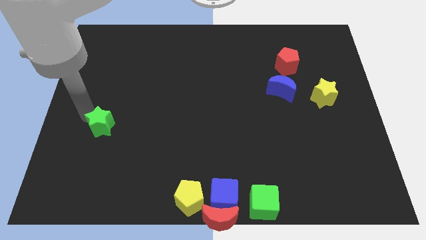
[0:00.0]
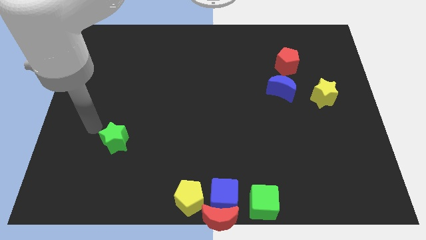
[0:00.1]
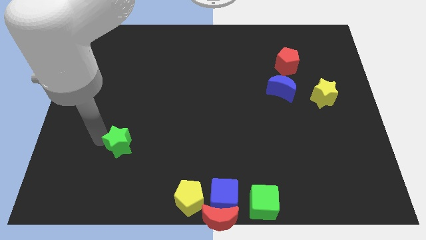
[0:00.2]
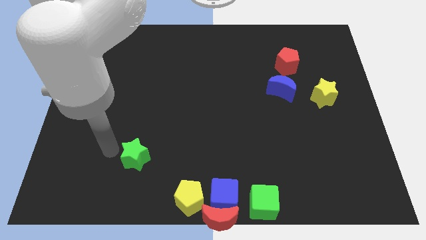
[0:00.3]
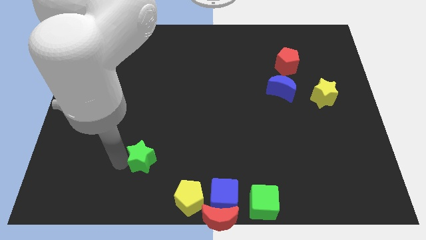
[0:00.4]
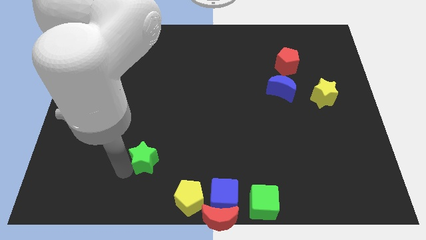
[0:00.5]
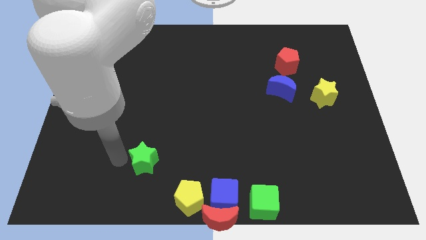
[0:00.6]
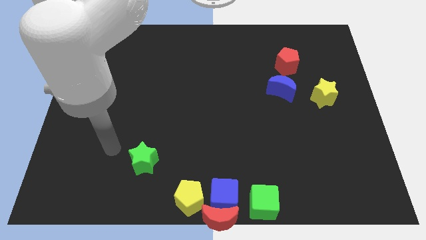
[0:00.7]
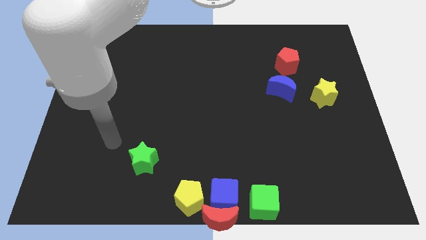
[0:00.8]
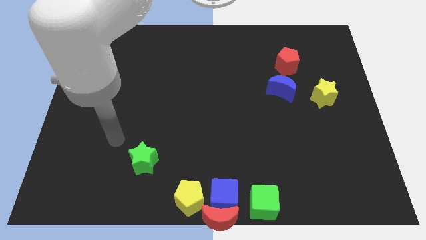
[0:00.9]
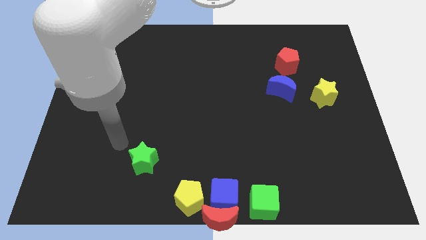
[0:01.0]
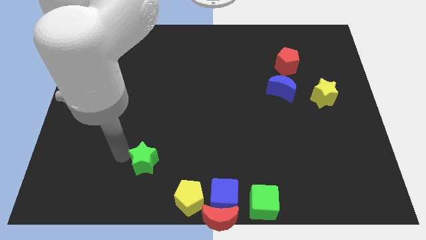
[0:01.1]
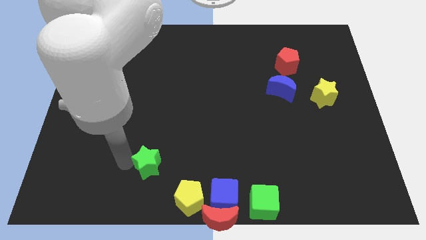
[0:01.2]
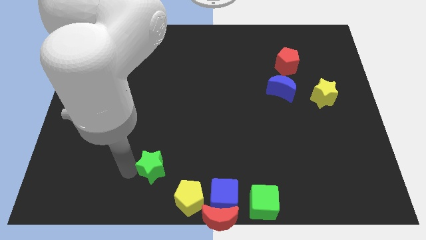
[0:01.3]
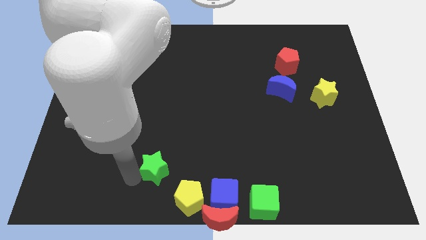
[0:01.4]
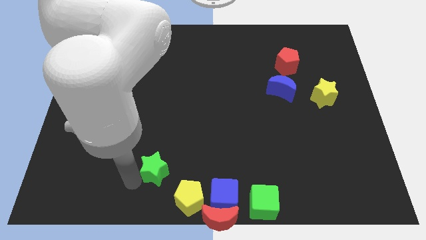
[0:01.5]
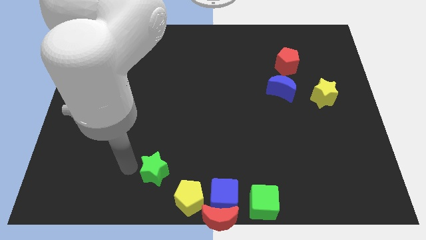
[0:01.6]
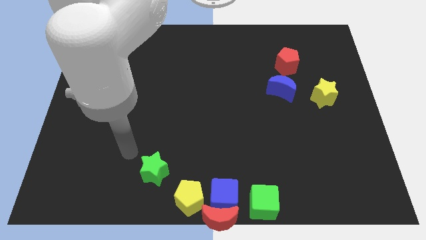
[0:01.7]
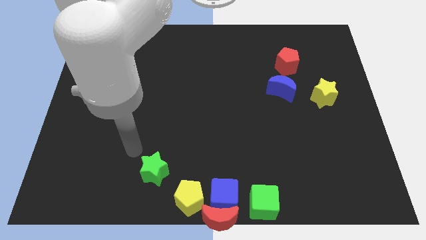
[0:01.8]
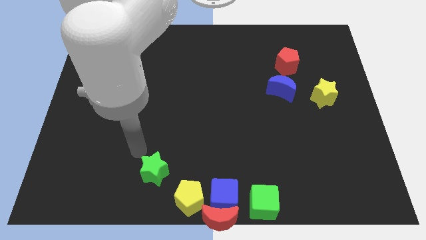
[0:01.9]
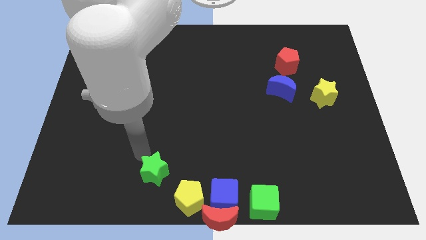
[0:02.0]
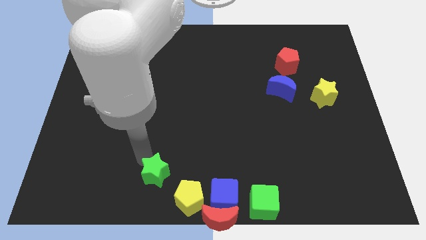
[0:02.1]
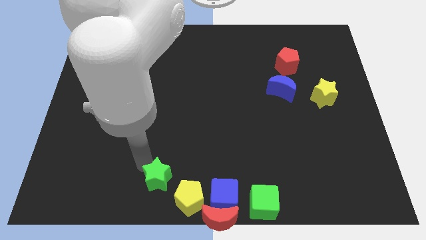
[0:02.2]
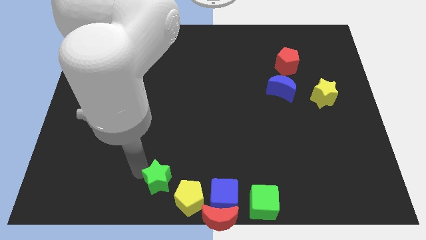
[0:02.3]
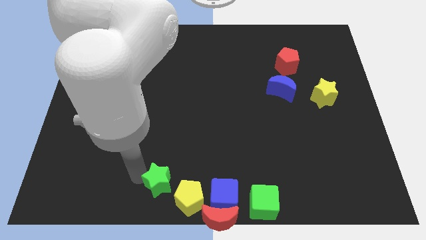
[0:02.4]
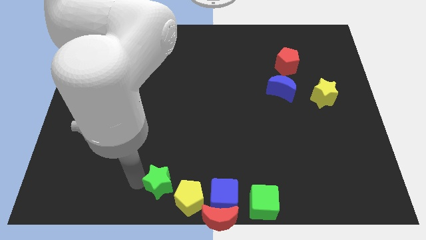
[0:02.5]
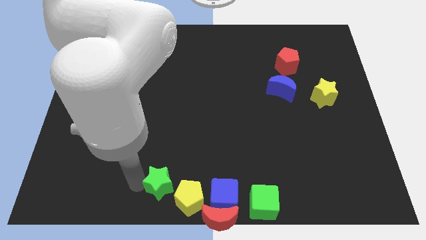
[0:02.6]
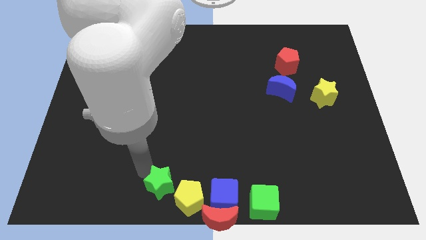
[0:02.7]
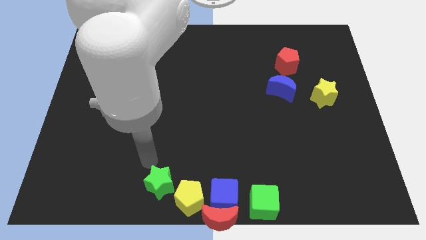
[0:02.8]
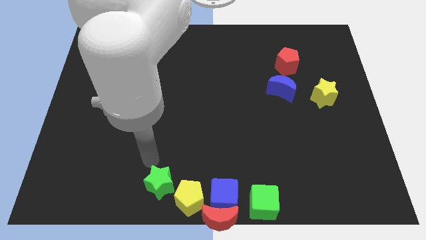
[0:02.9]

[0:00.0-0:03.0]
move the green star towards the bottom side of the board

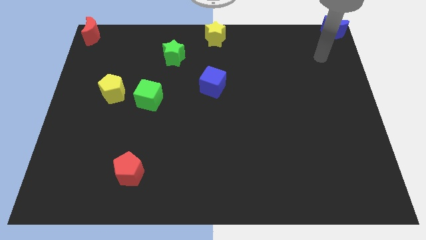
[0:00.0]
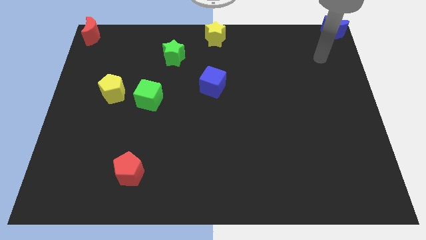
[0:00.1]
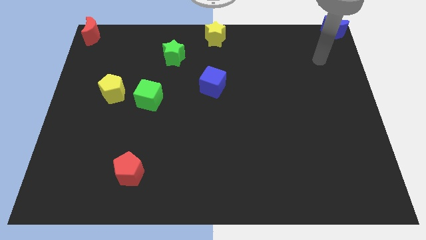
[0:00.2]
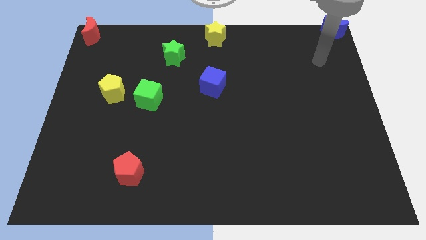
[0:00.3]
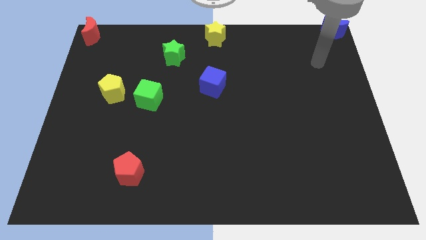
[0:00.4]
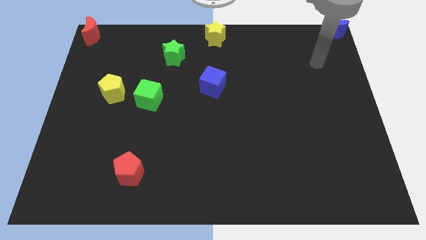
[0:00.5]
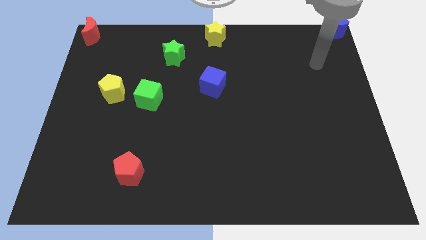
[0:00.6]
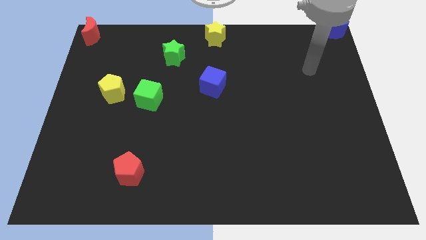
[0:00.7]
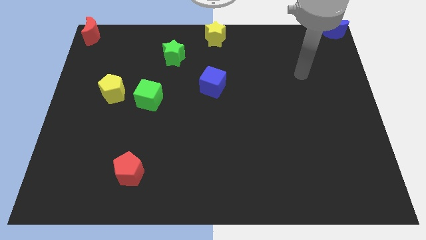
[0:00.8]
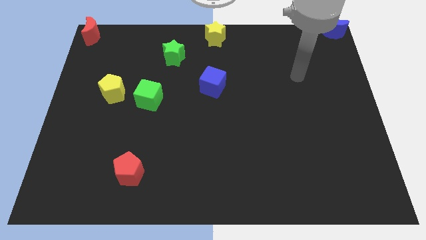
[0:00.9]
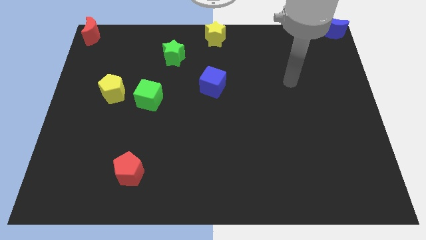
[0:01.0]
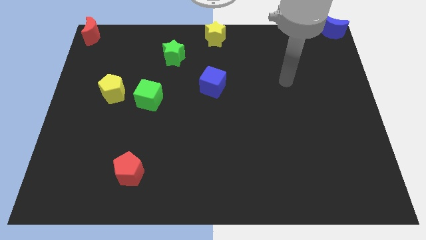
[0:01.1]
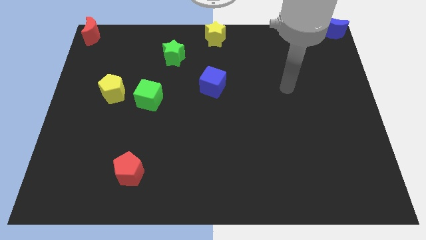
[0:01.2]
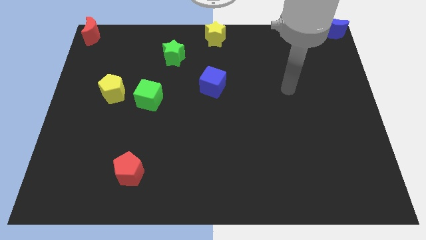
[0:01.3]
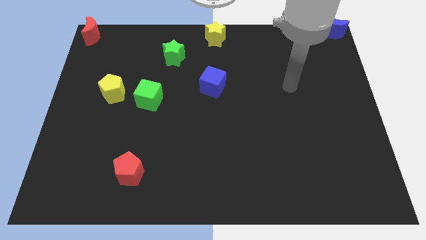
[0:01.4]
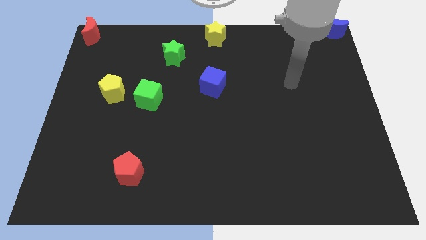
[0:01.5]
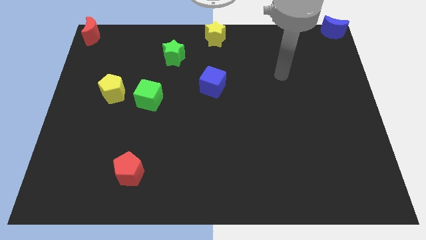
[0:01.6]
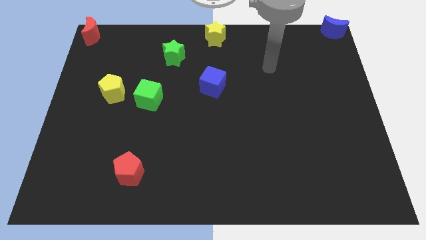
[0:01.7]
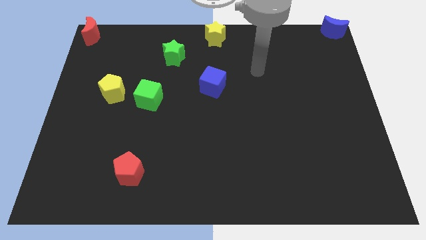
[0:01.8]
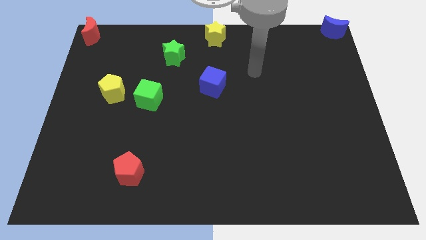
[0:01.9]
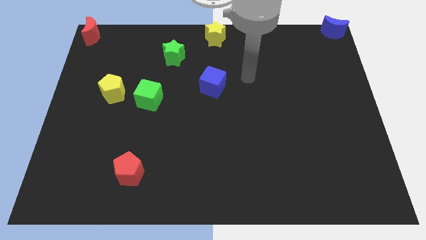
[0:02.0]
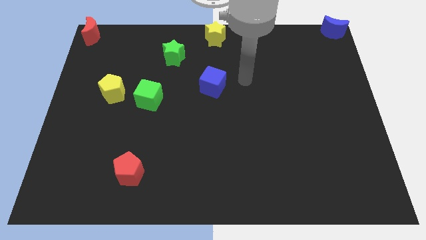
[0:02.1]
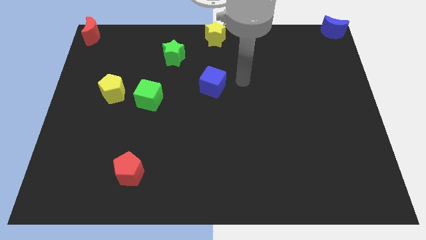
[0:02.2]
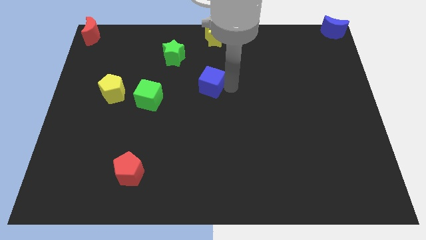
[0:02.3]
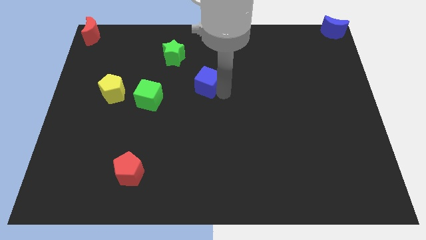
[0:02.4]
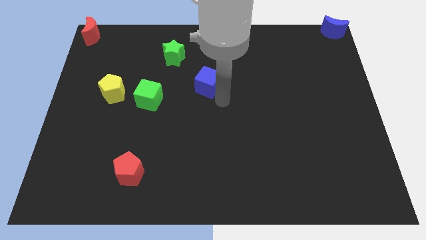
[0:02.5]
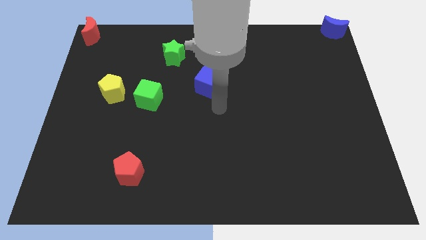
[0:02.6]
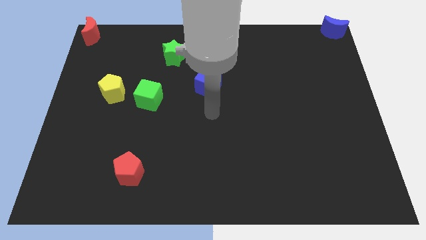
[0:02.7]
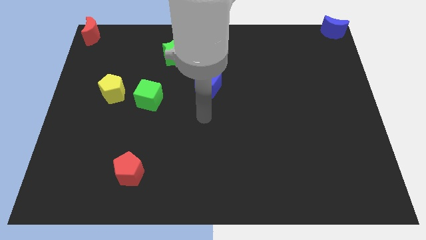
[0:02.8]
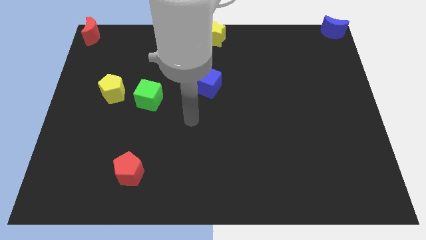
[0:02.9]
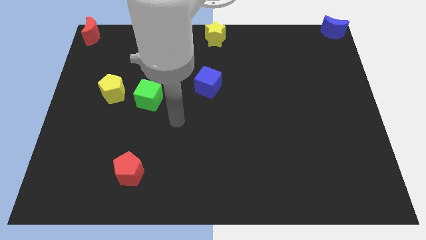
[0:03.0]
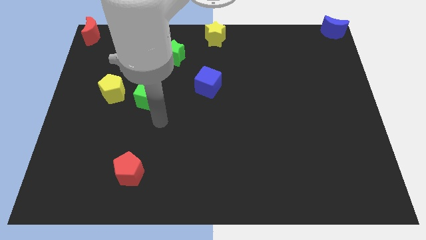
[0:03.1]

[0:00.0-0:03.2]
slightly move the blue cube to the top of the board

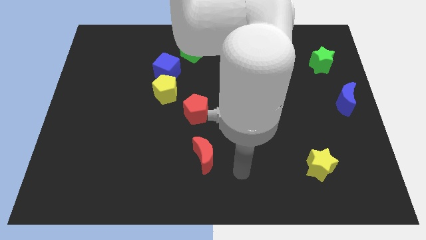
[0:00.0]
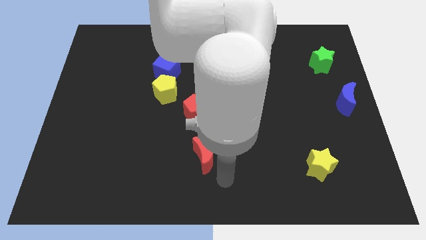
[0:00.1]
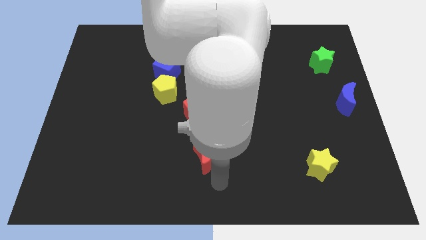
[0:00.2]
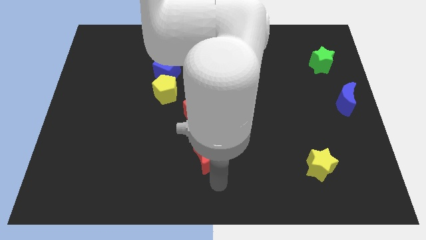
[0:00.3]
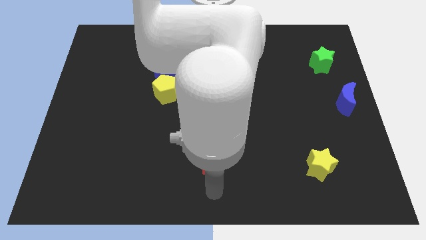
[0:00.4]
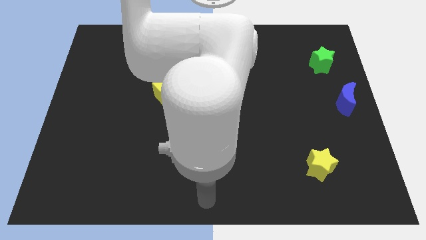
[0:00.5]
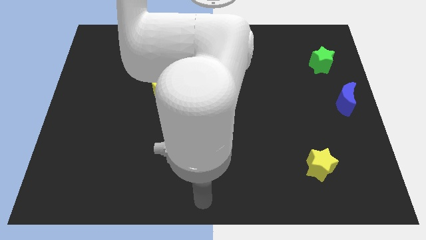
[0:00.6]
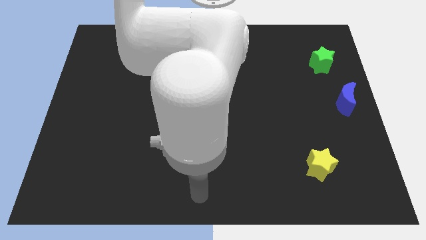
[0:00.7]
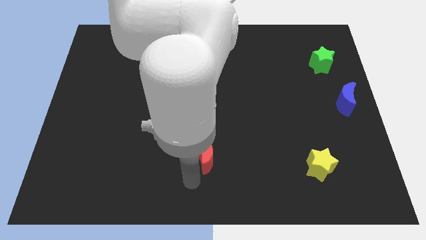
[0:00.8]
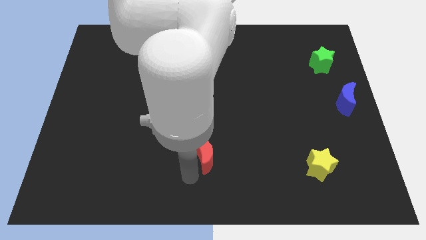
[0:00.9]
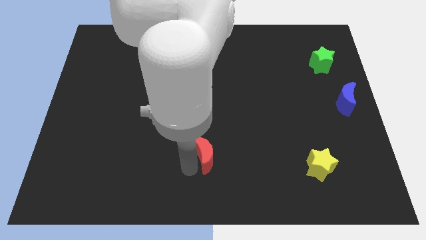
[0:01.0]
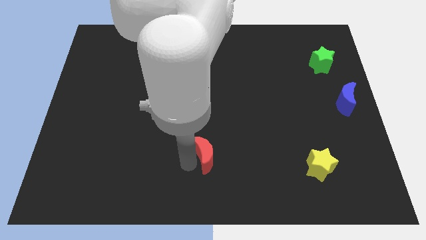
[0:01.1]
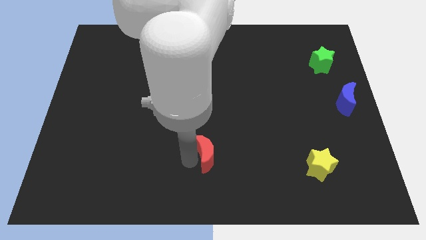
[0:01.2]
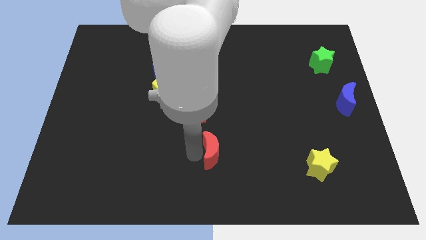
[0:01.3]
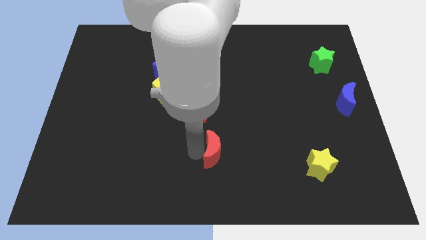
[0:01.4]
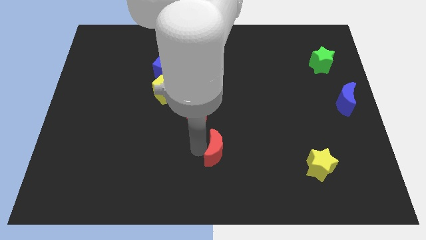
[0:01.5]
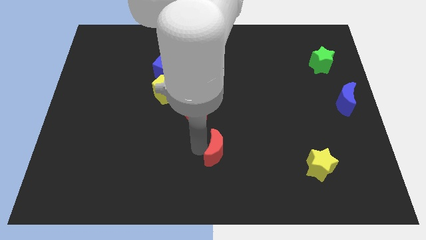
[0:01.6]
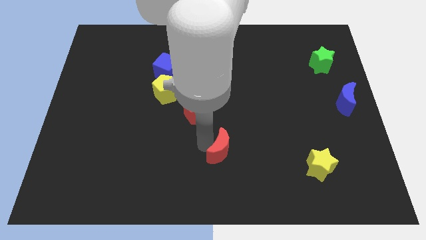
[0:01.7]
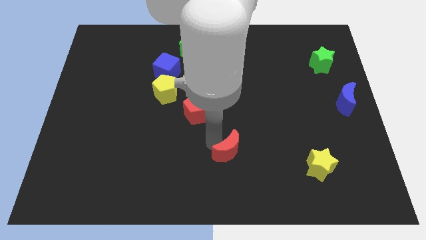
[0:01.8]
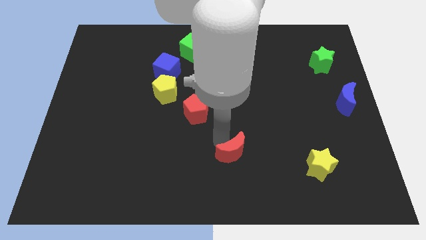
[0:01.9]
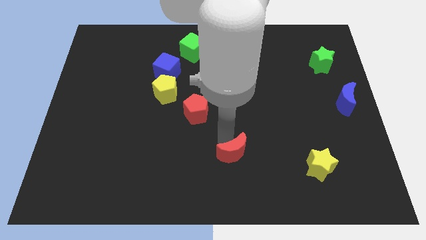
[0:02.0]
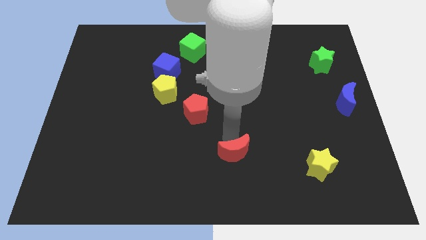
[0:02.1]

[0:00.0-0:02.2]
slide the red moon diagonally bottom right to the red pentagon

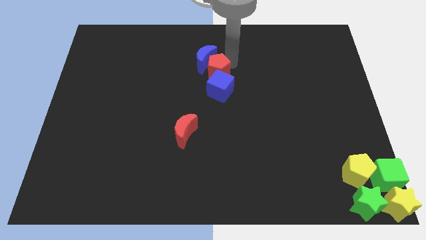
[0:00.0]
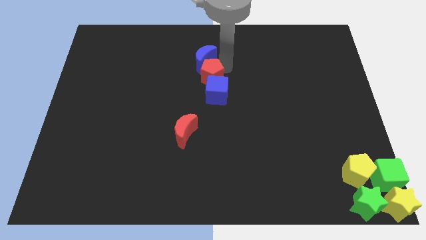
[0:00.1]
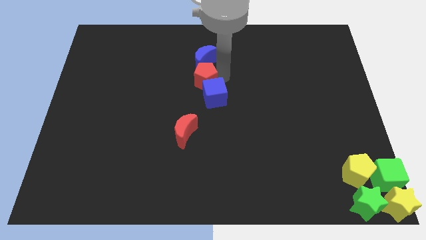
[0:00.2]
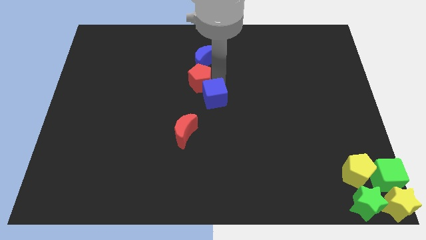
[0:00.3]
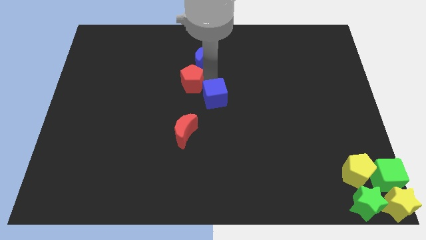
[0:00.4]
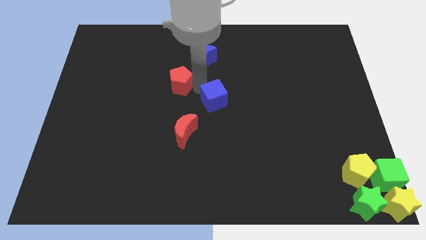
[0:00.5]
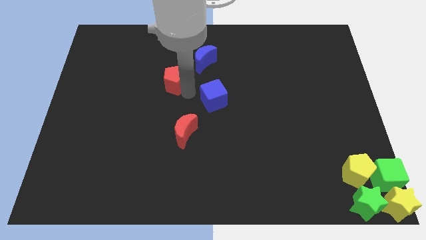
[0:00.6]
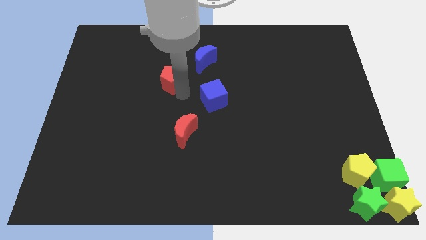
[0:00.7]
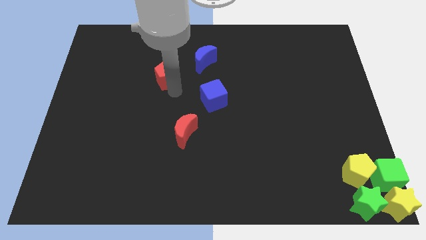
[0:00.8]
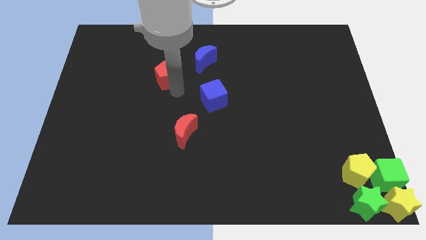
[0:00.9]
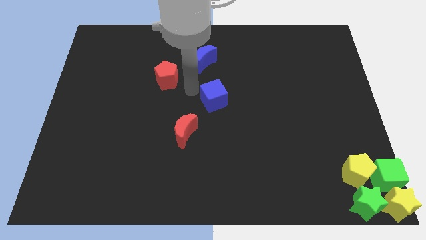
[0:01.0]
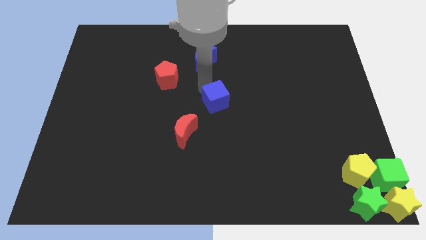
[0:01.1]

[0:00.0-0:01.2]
push the red pentagon away from the vertical line
